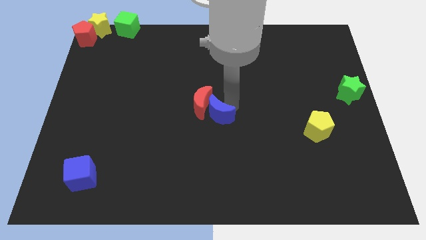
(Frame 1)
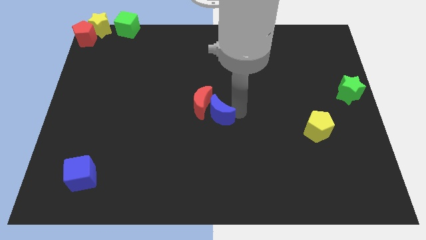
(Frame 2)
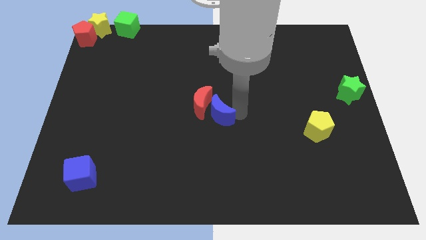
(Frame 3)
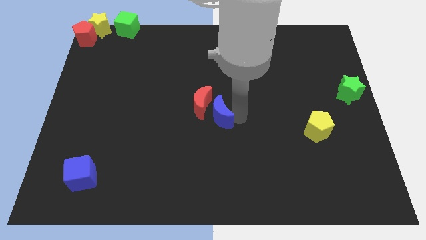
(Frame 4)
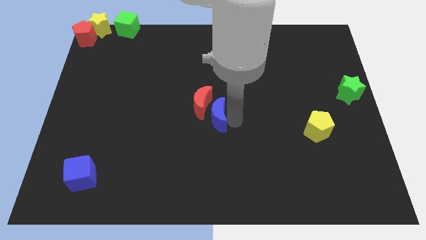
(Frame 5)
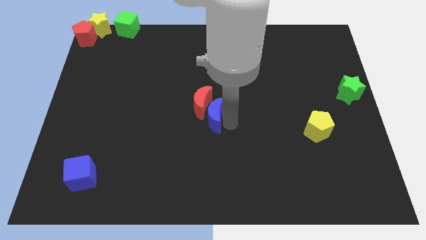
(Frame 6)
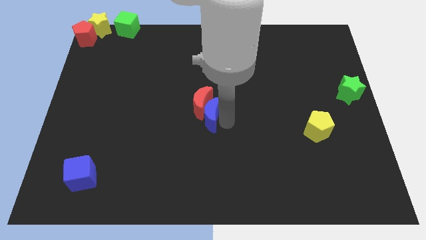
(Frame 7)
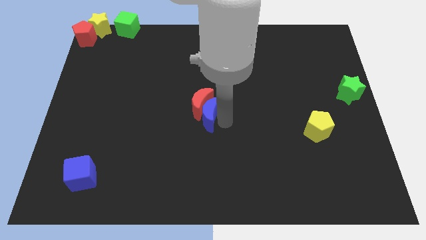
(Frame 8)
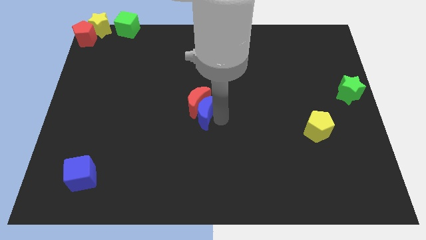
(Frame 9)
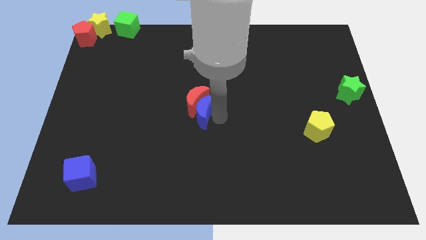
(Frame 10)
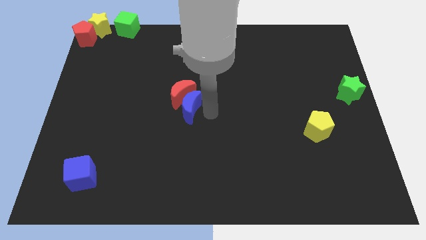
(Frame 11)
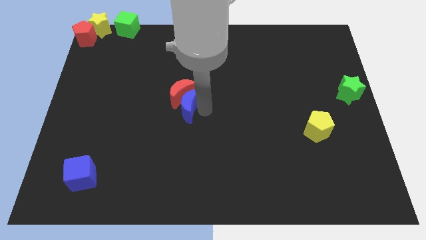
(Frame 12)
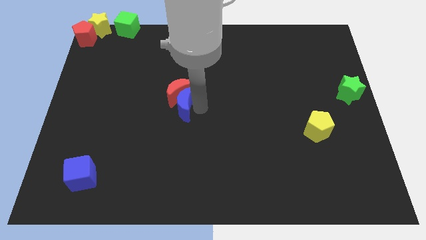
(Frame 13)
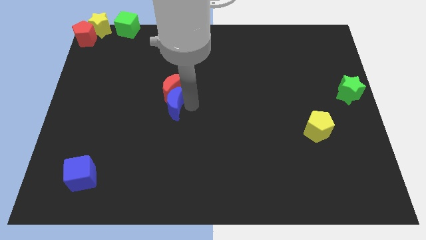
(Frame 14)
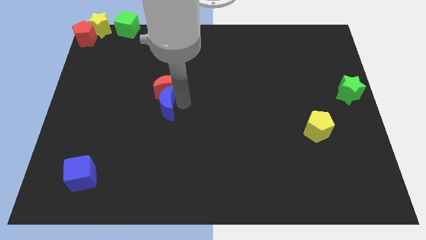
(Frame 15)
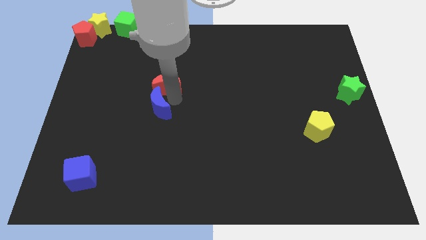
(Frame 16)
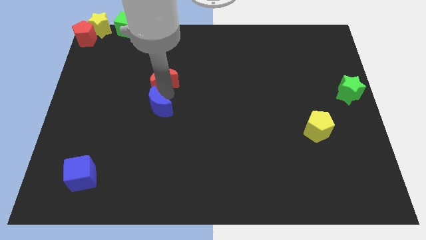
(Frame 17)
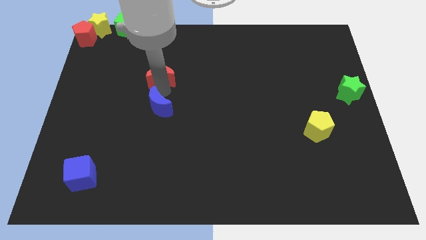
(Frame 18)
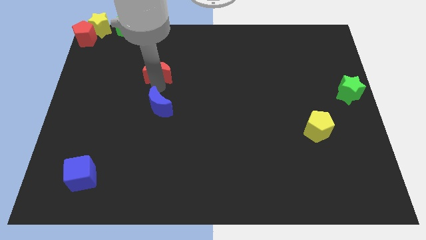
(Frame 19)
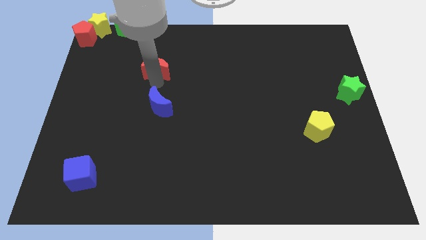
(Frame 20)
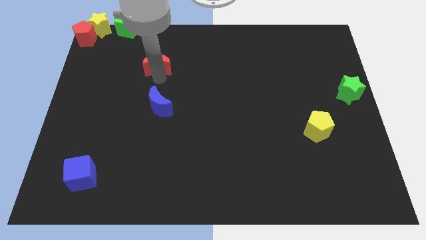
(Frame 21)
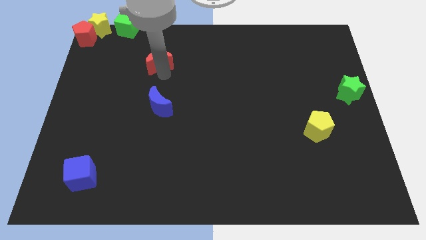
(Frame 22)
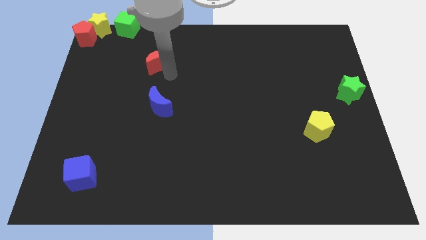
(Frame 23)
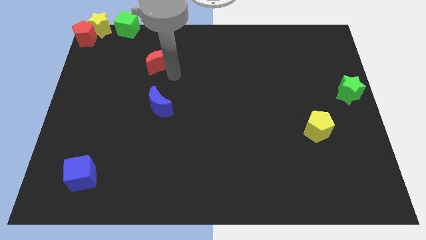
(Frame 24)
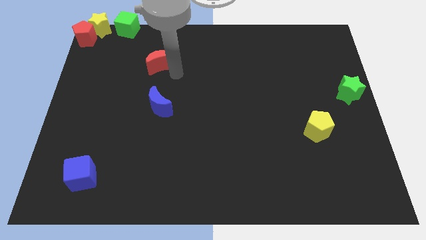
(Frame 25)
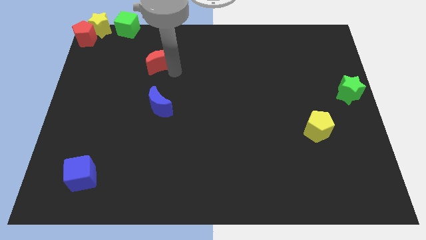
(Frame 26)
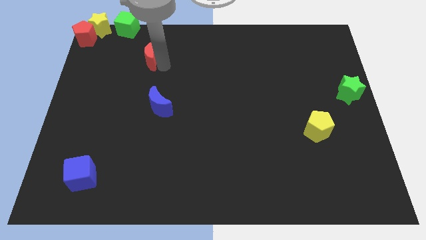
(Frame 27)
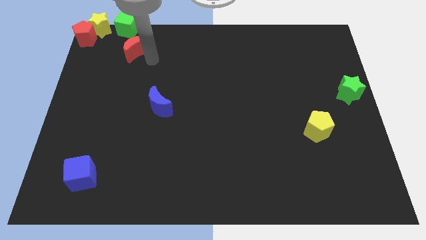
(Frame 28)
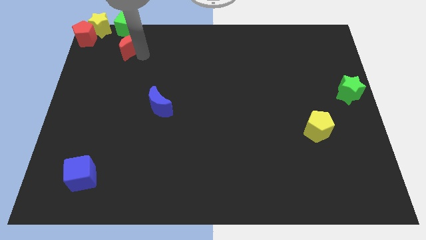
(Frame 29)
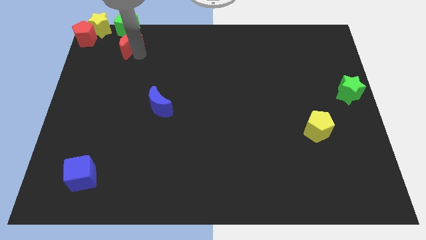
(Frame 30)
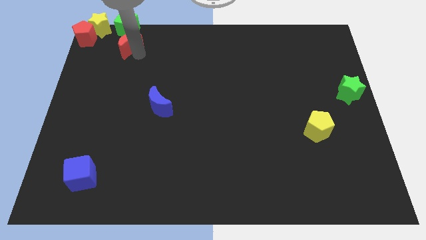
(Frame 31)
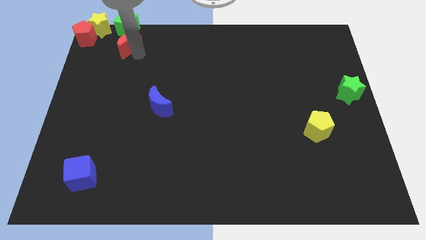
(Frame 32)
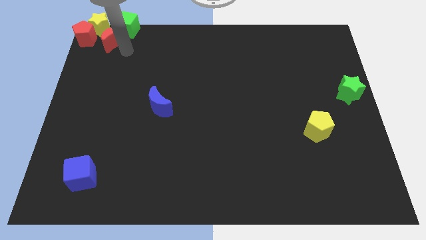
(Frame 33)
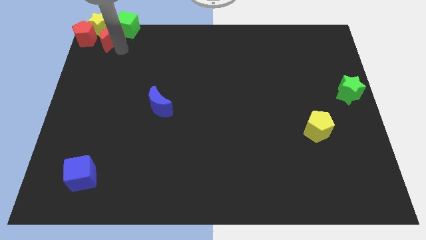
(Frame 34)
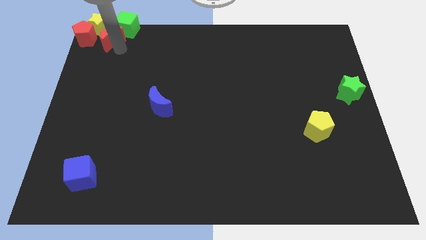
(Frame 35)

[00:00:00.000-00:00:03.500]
push the red moon to the top left of the board

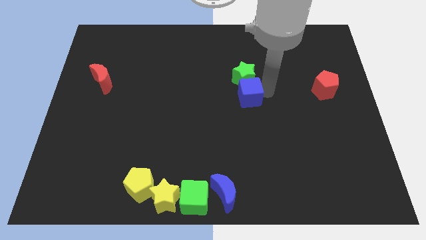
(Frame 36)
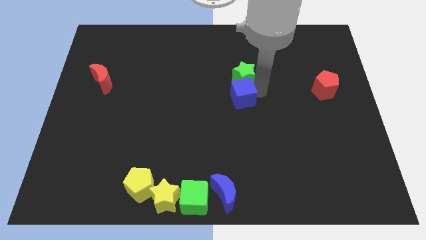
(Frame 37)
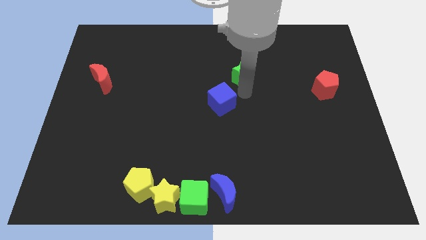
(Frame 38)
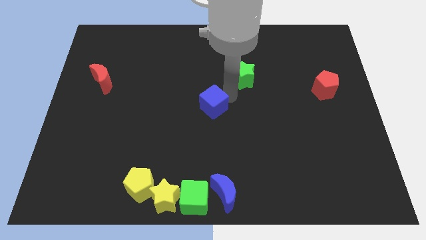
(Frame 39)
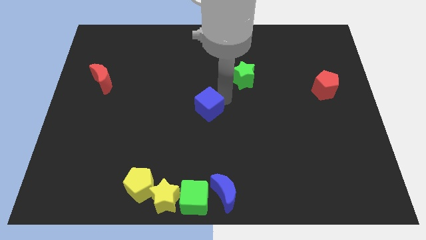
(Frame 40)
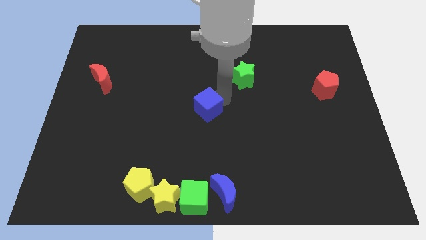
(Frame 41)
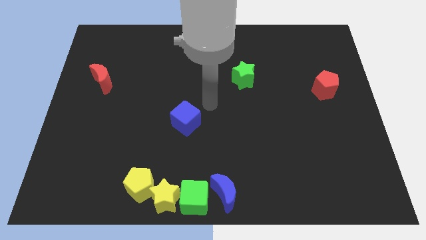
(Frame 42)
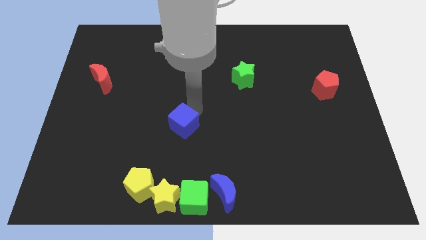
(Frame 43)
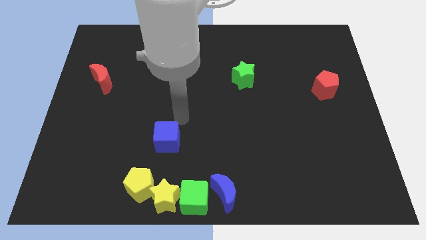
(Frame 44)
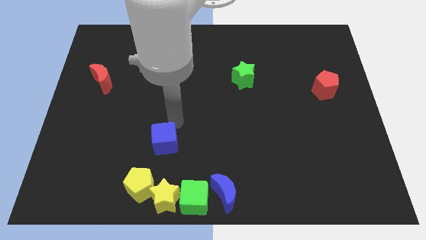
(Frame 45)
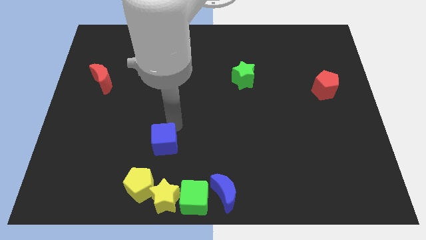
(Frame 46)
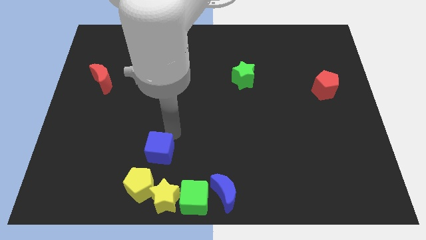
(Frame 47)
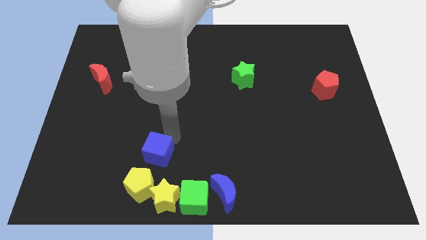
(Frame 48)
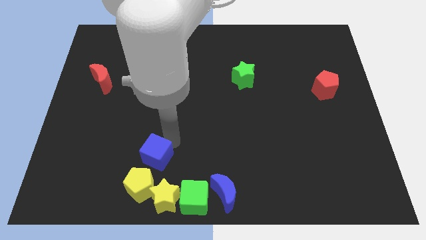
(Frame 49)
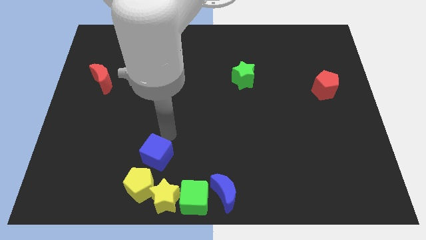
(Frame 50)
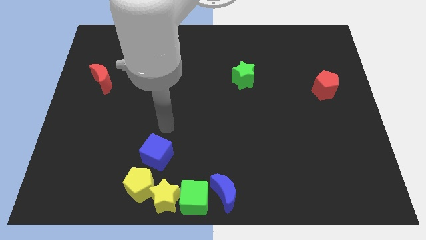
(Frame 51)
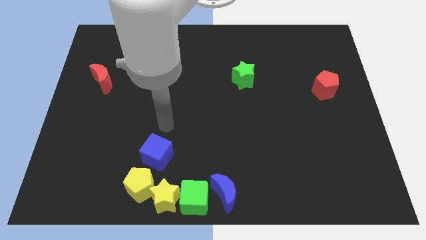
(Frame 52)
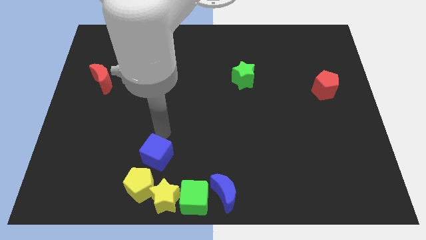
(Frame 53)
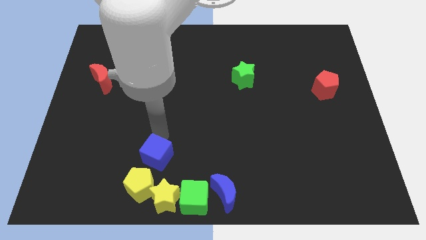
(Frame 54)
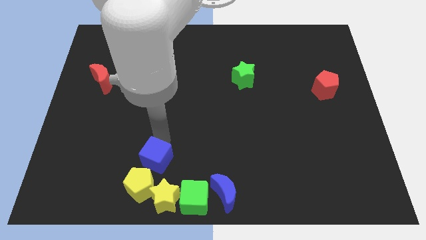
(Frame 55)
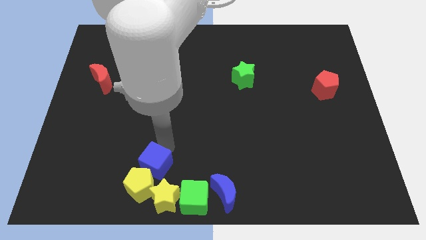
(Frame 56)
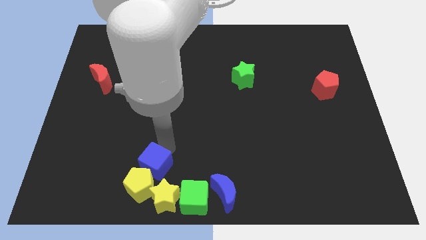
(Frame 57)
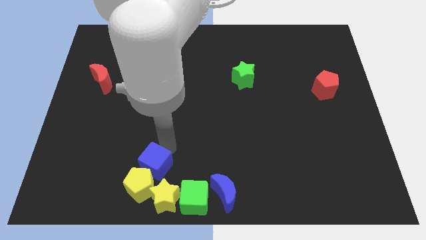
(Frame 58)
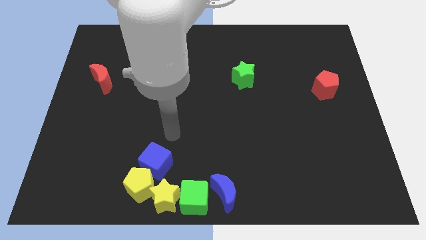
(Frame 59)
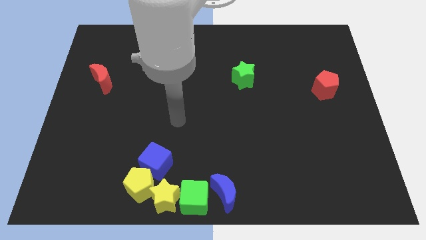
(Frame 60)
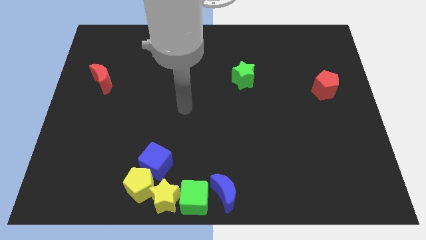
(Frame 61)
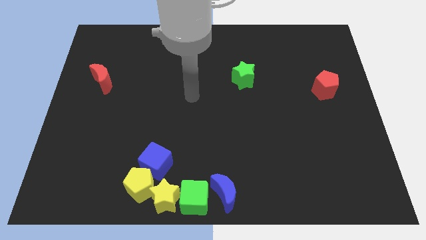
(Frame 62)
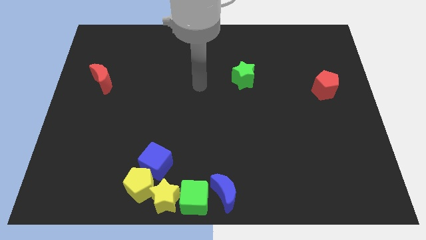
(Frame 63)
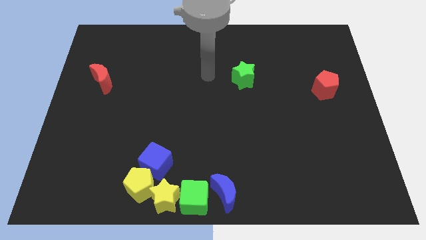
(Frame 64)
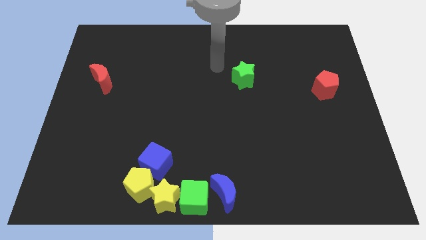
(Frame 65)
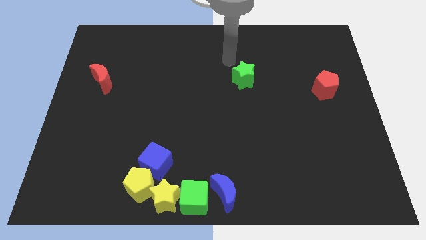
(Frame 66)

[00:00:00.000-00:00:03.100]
place the blue cube at the bottom center

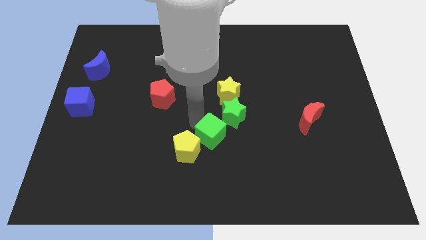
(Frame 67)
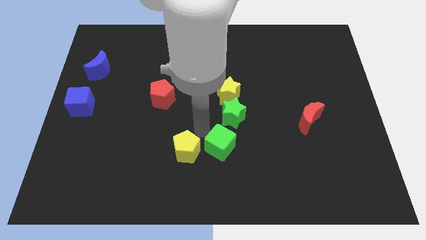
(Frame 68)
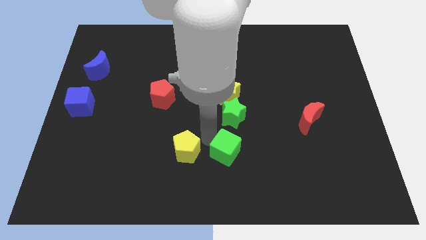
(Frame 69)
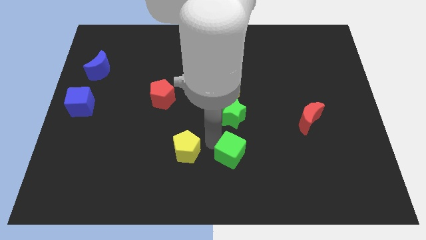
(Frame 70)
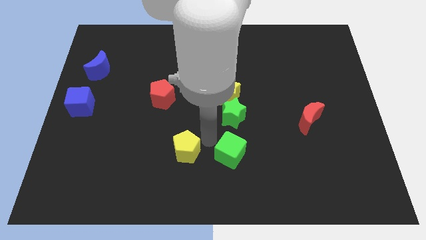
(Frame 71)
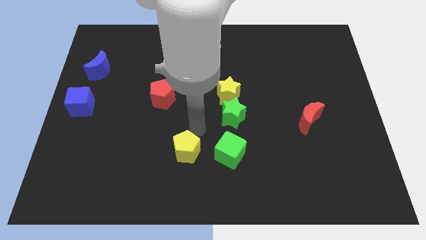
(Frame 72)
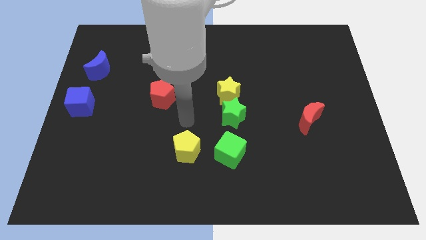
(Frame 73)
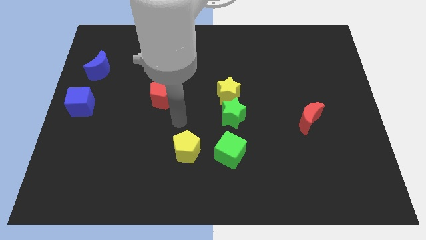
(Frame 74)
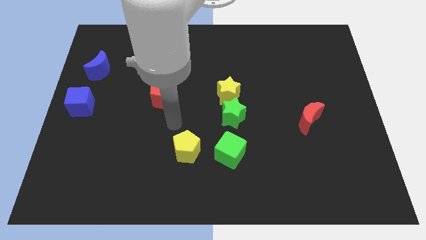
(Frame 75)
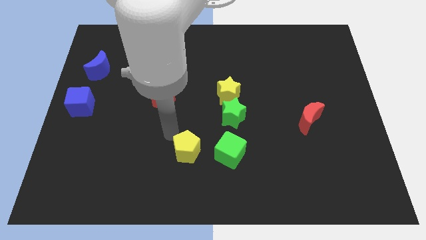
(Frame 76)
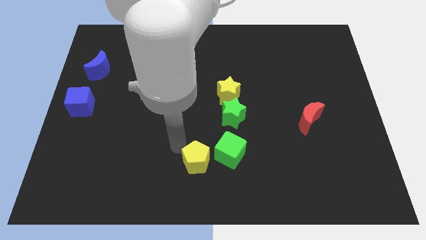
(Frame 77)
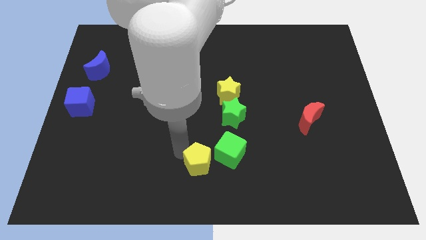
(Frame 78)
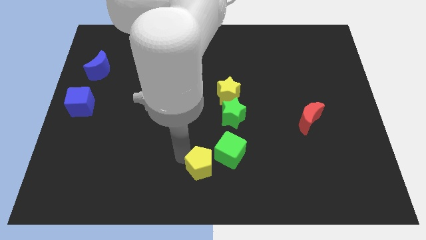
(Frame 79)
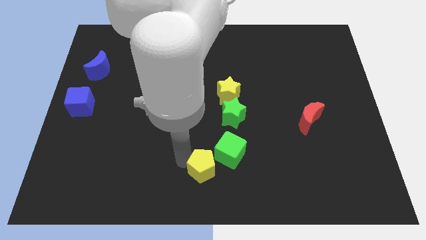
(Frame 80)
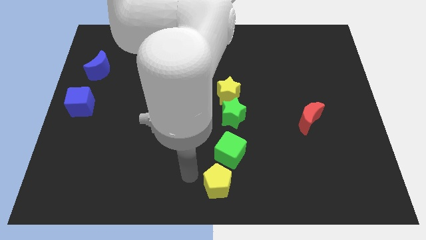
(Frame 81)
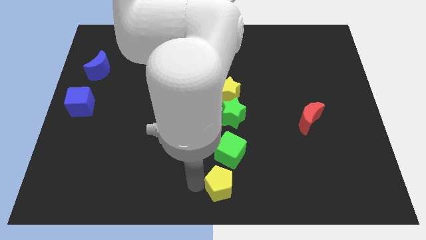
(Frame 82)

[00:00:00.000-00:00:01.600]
place the yellow pentagon below the green cube

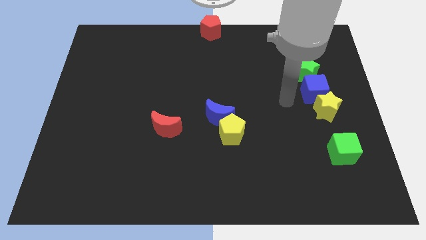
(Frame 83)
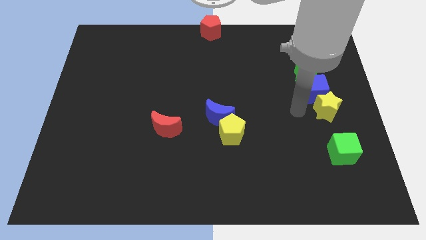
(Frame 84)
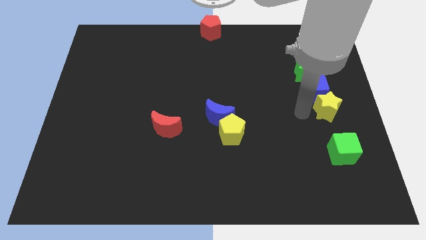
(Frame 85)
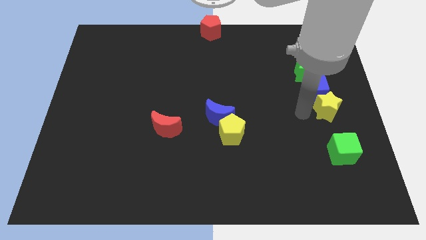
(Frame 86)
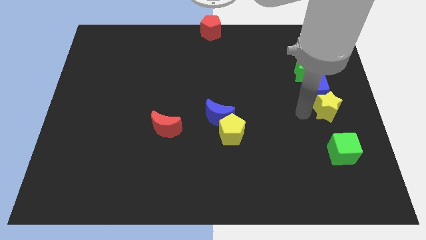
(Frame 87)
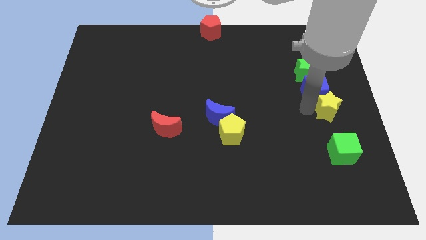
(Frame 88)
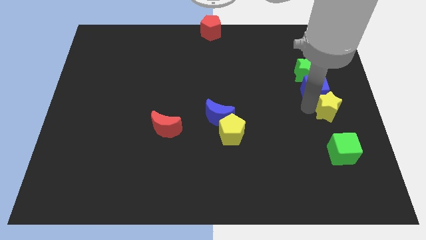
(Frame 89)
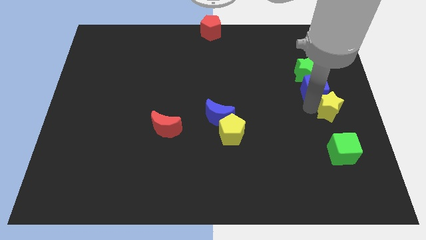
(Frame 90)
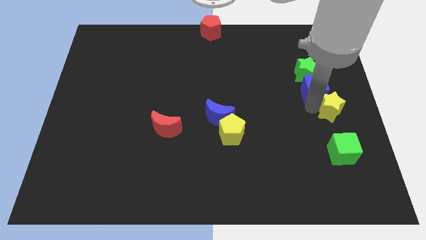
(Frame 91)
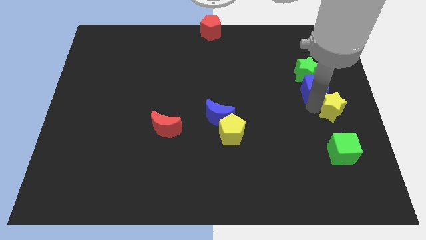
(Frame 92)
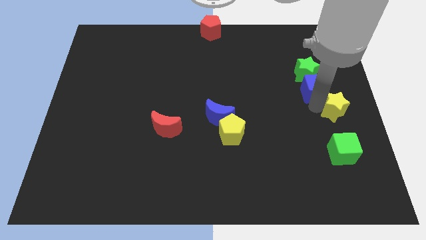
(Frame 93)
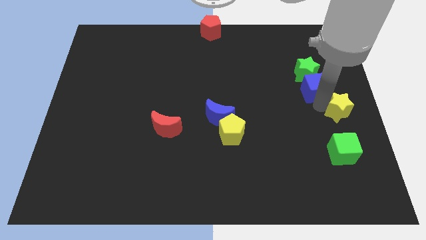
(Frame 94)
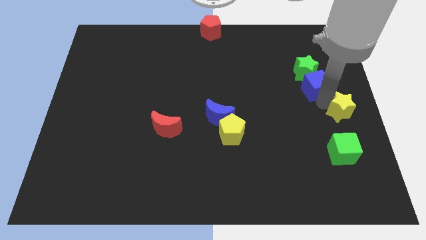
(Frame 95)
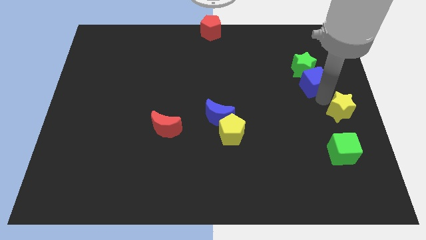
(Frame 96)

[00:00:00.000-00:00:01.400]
push the yellow star slightly to the right
